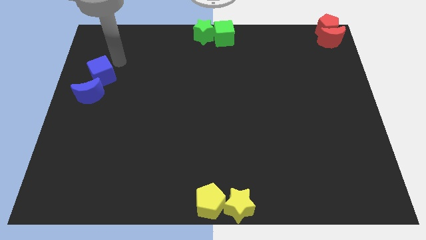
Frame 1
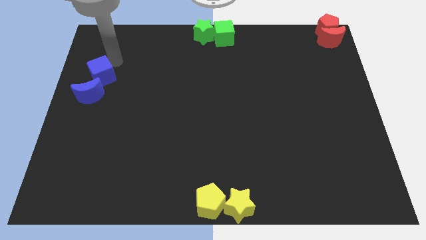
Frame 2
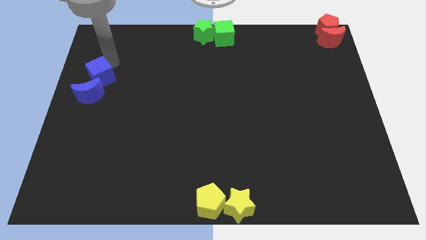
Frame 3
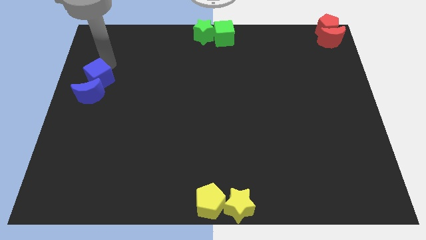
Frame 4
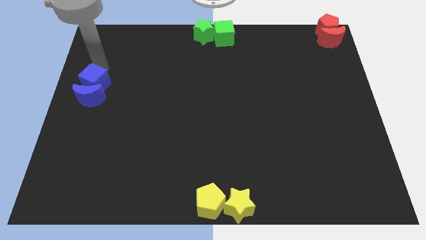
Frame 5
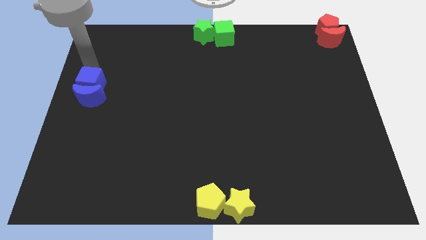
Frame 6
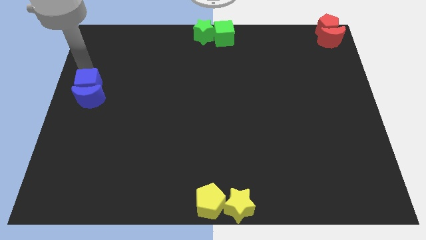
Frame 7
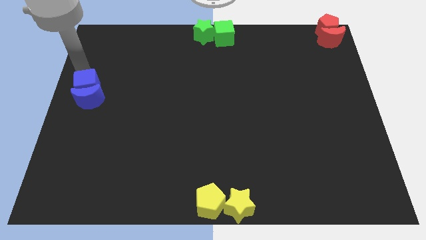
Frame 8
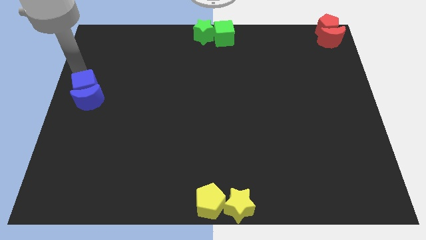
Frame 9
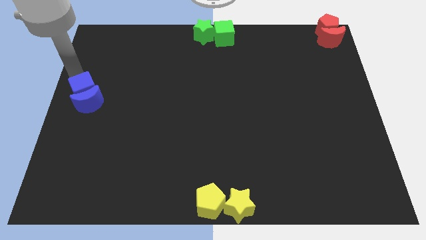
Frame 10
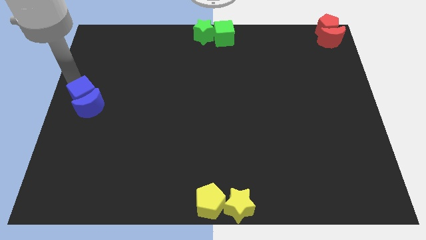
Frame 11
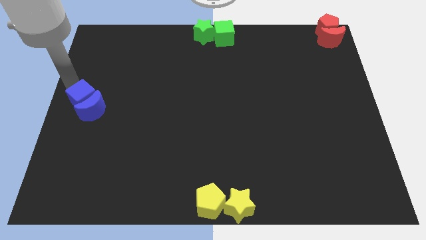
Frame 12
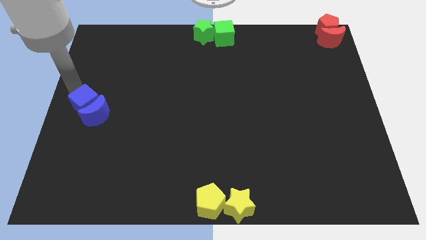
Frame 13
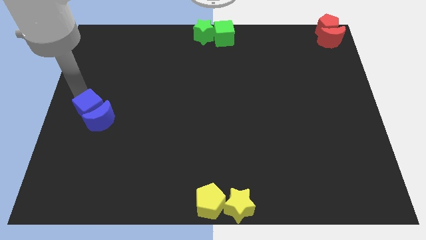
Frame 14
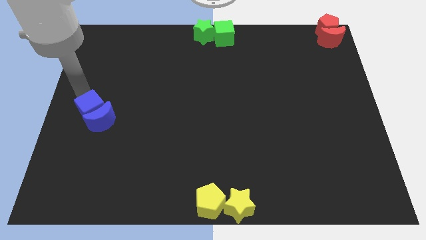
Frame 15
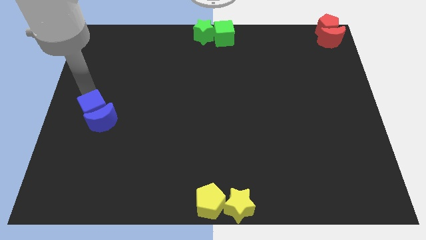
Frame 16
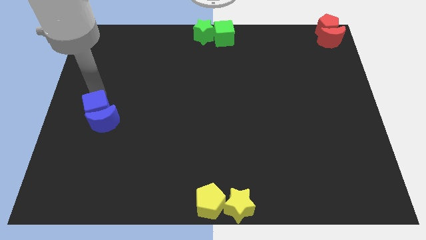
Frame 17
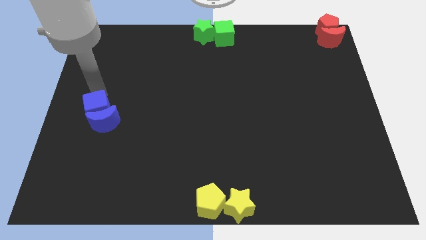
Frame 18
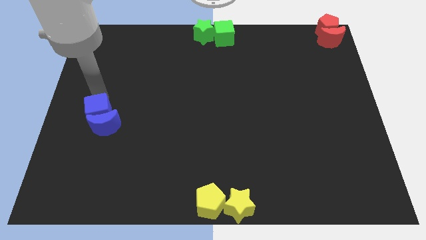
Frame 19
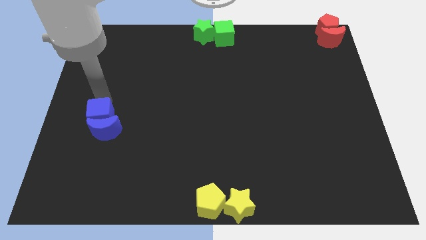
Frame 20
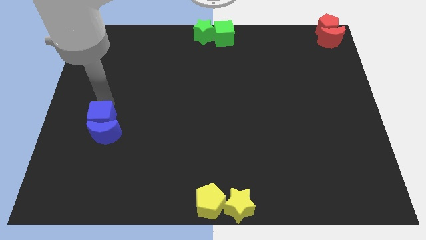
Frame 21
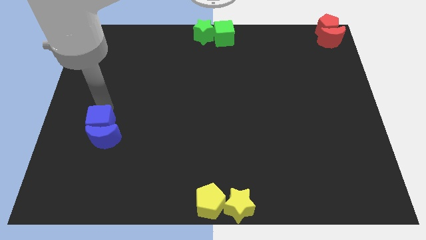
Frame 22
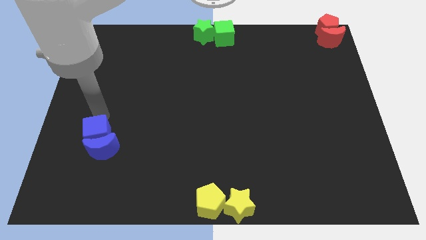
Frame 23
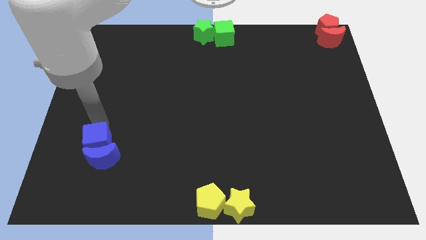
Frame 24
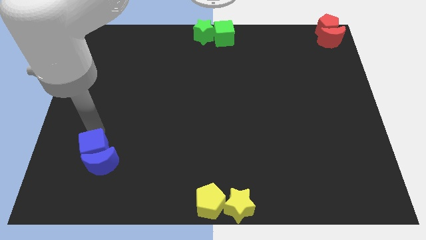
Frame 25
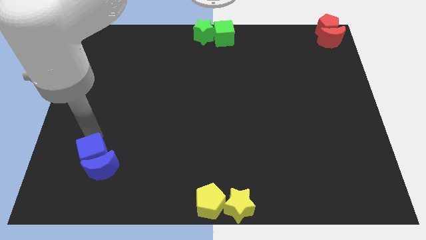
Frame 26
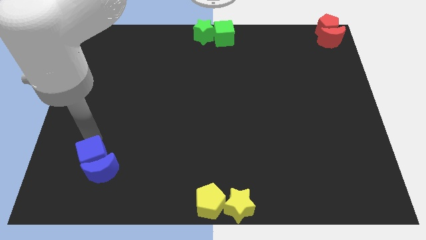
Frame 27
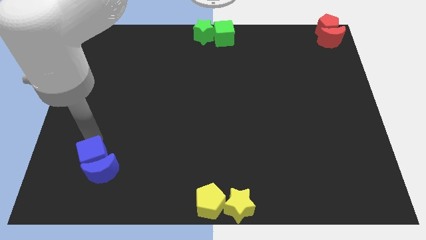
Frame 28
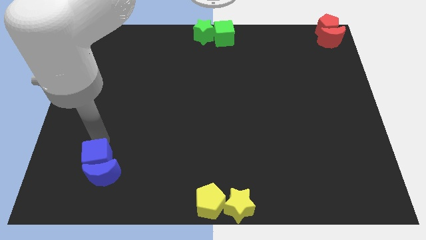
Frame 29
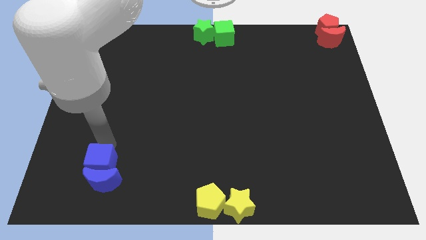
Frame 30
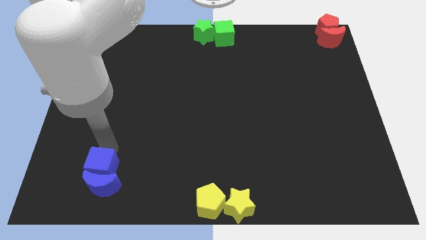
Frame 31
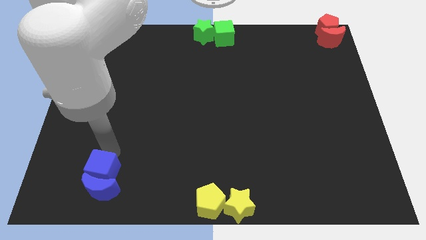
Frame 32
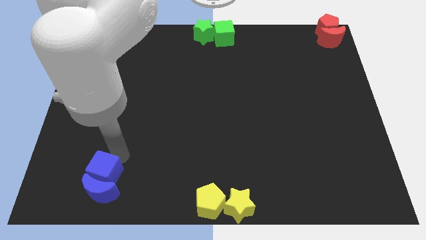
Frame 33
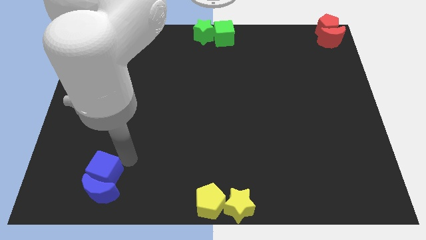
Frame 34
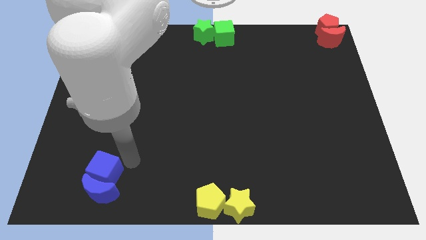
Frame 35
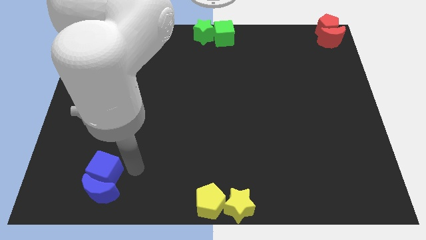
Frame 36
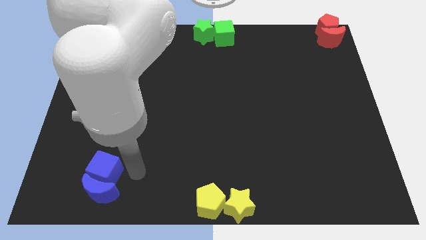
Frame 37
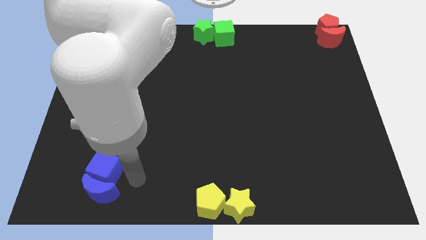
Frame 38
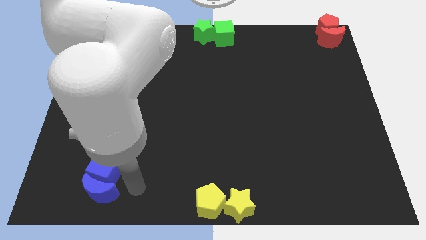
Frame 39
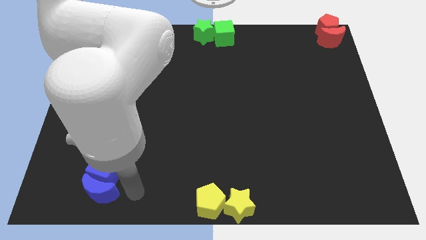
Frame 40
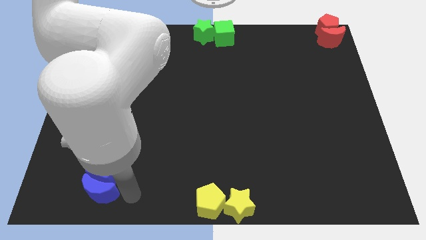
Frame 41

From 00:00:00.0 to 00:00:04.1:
move the blue blocks towards the bottom left

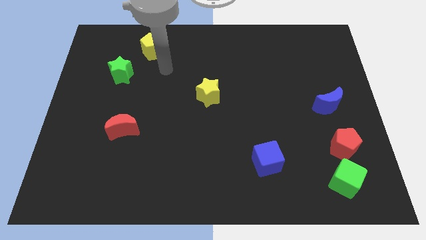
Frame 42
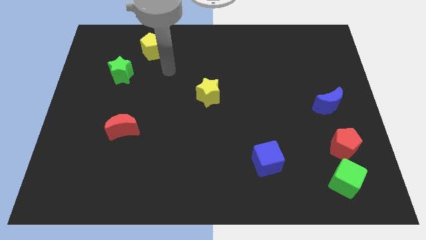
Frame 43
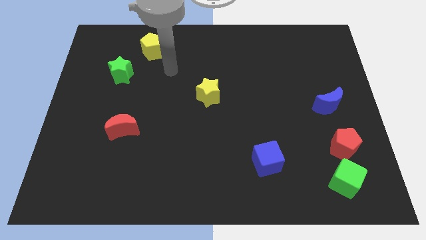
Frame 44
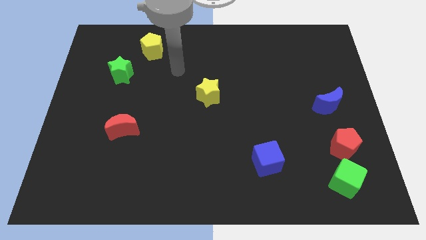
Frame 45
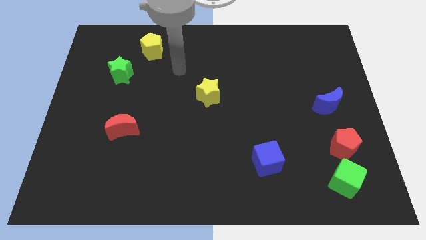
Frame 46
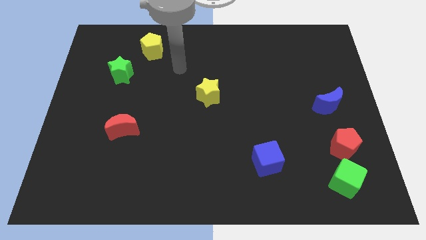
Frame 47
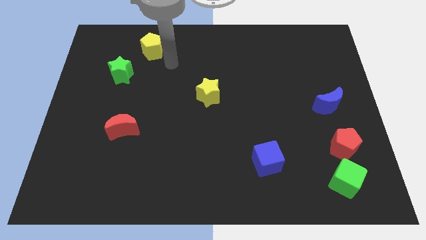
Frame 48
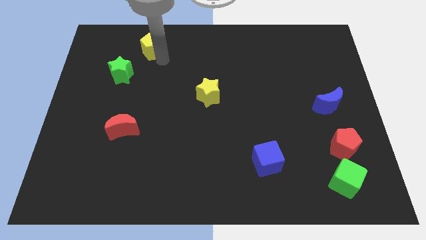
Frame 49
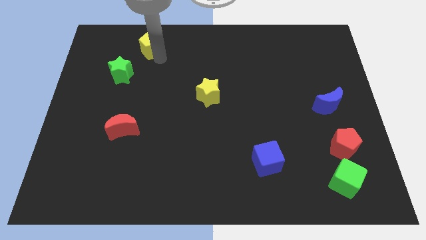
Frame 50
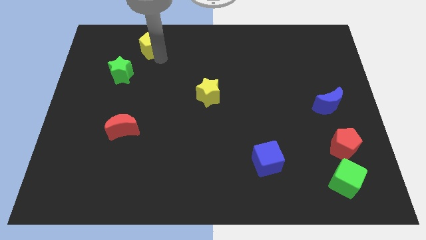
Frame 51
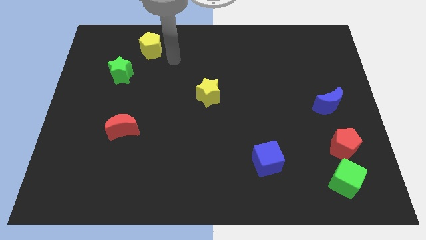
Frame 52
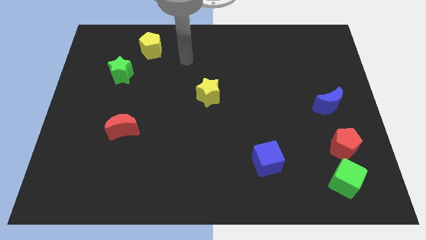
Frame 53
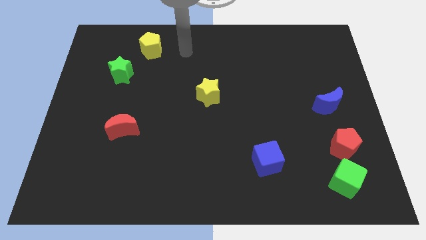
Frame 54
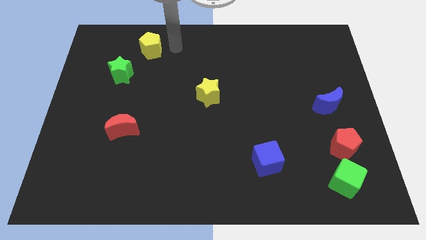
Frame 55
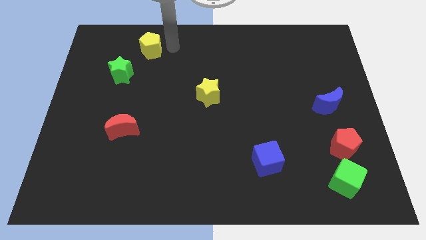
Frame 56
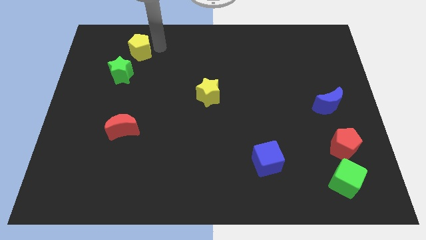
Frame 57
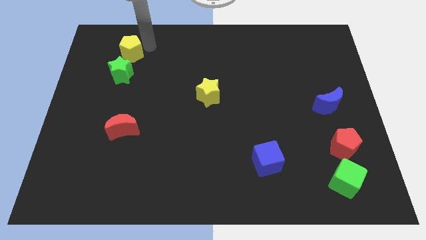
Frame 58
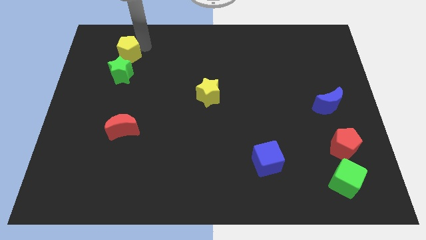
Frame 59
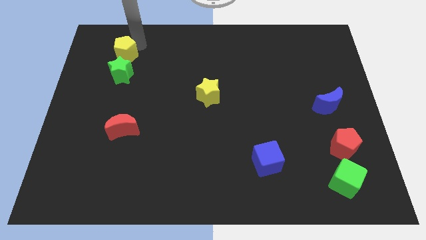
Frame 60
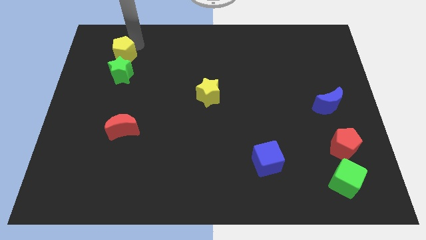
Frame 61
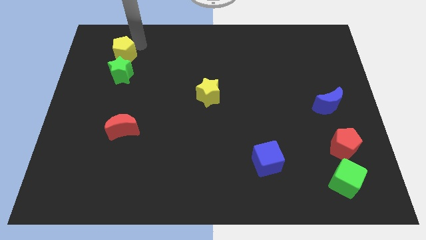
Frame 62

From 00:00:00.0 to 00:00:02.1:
place the yellow pentagon above the green star

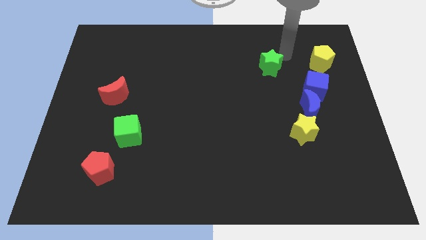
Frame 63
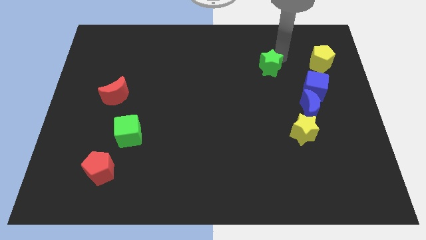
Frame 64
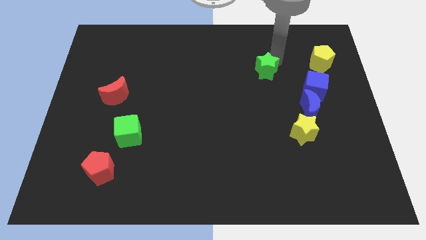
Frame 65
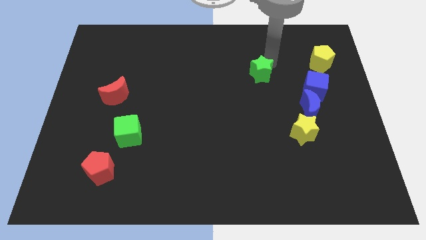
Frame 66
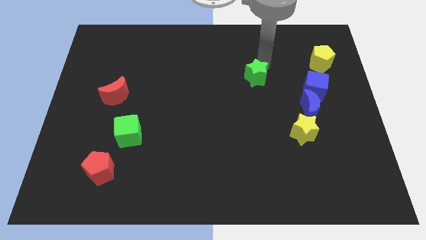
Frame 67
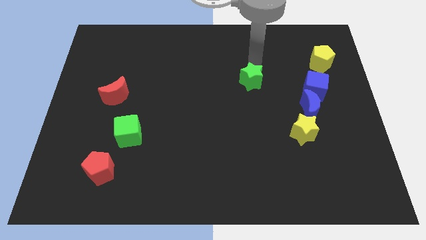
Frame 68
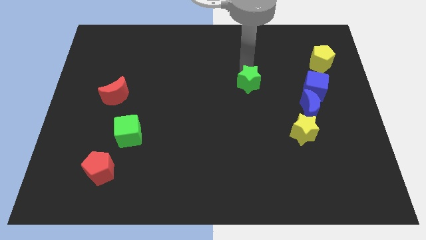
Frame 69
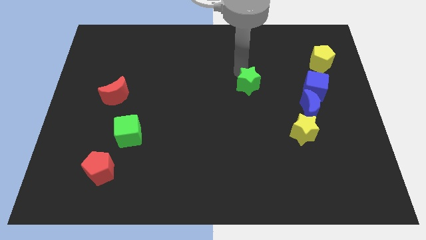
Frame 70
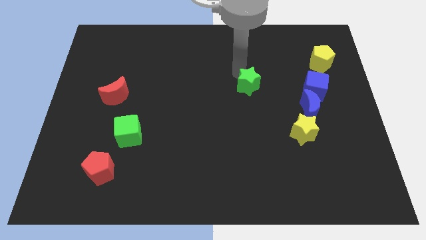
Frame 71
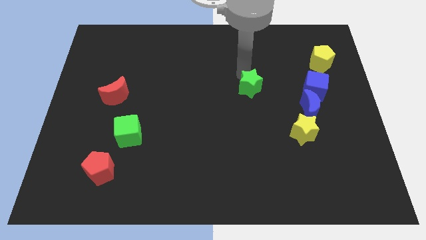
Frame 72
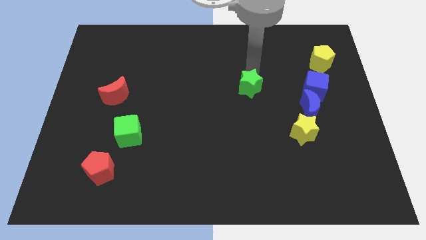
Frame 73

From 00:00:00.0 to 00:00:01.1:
push green star towards center

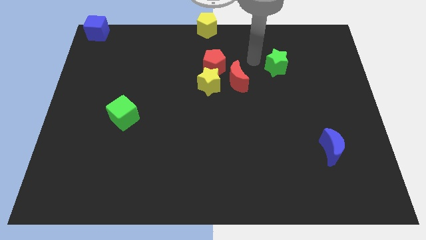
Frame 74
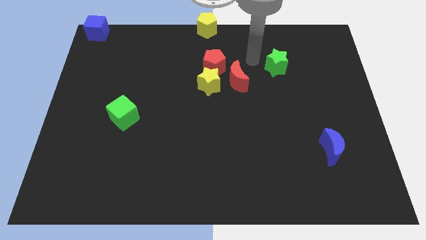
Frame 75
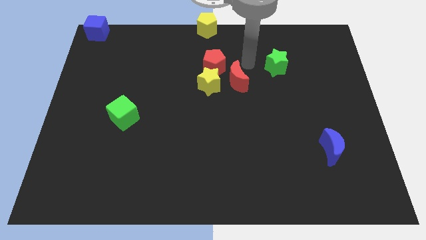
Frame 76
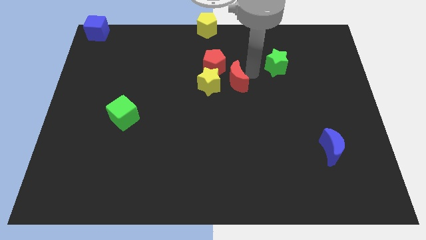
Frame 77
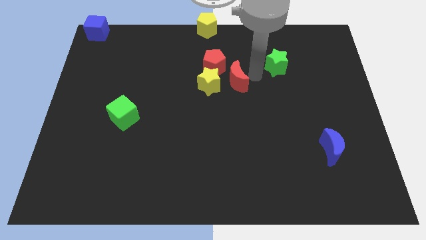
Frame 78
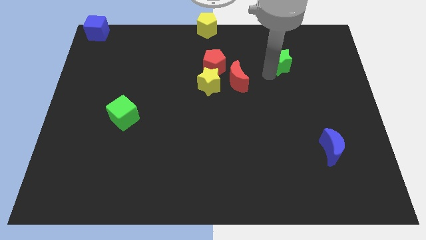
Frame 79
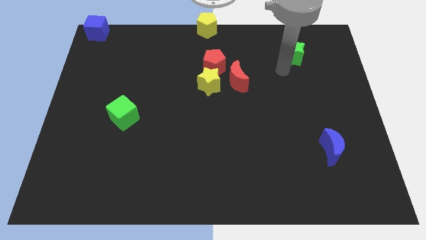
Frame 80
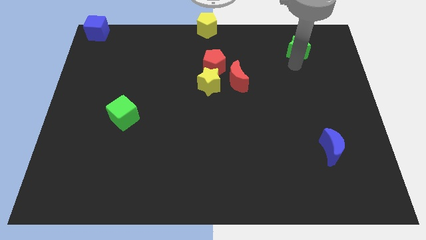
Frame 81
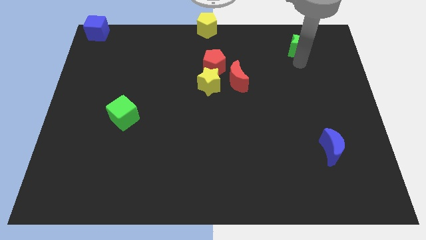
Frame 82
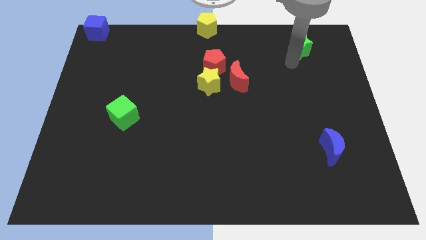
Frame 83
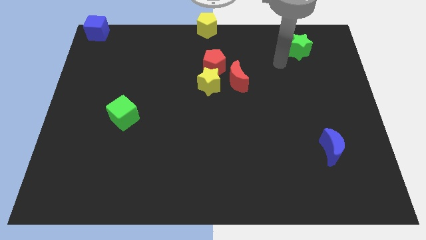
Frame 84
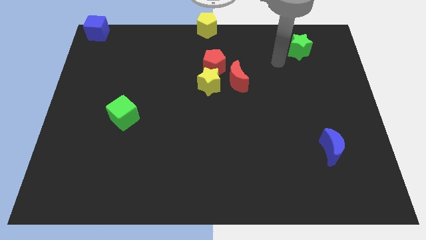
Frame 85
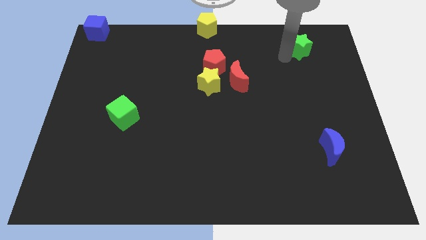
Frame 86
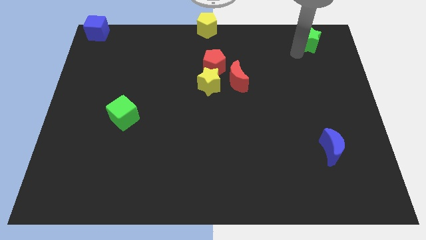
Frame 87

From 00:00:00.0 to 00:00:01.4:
push the green star towards the top right

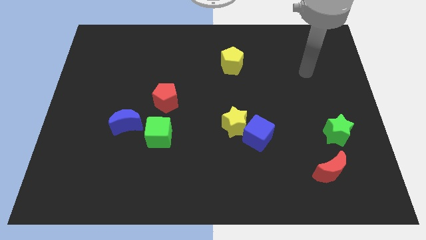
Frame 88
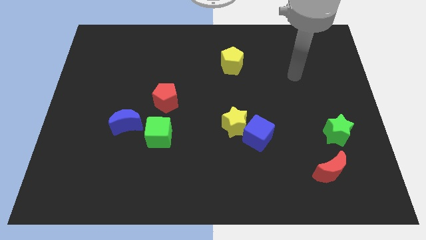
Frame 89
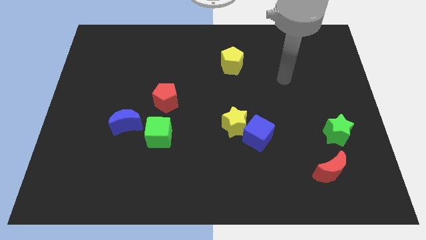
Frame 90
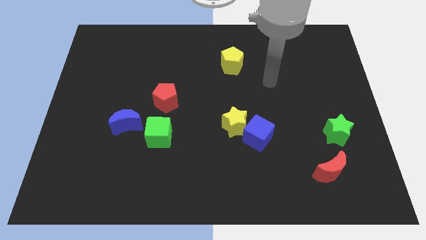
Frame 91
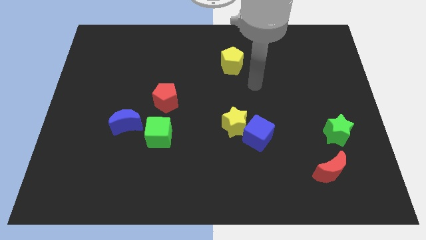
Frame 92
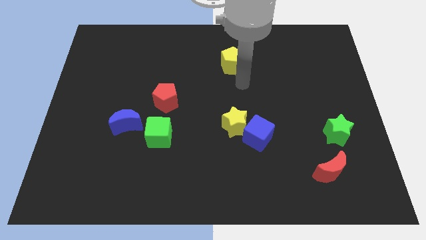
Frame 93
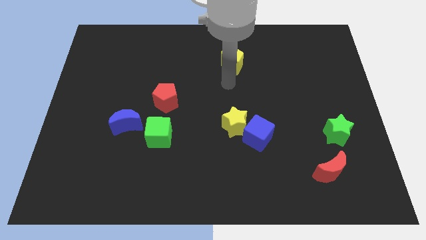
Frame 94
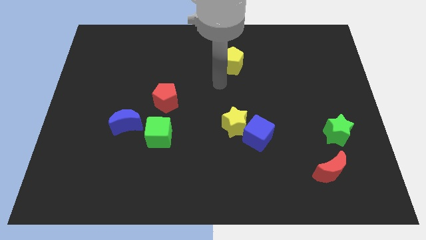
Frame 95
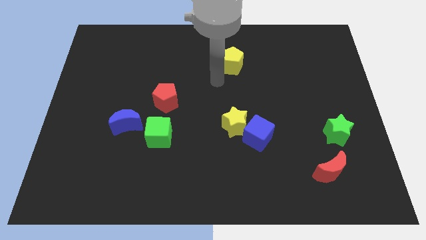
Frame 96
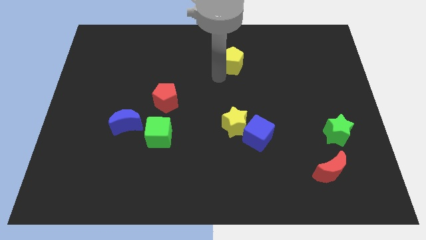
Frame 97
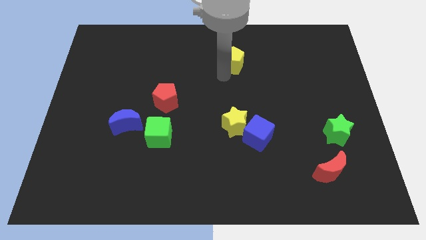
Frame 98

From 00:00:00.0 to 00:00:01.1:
tap on the left bottom side of yellow pentagon
